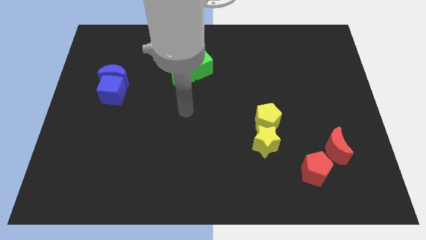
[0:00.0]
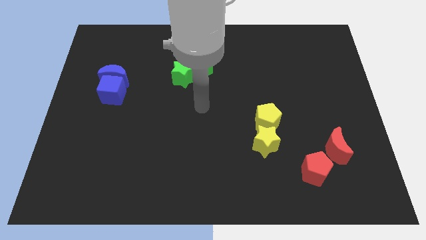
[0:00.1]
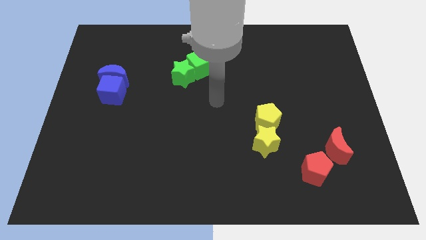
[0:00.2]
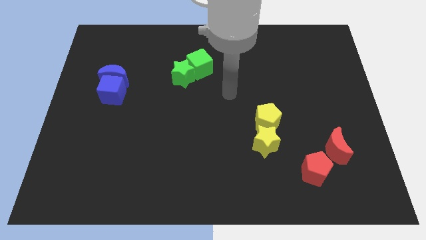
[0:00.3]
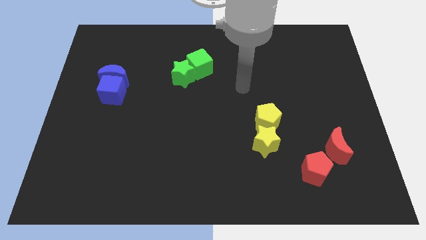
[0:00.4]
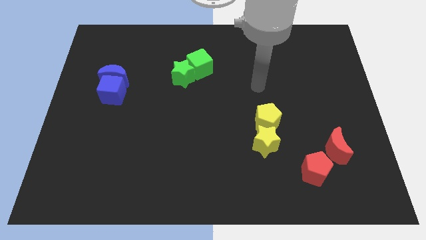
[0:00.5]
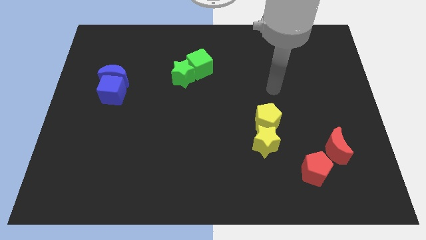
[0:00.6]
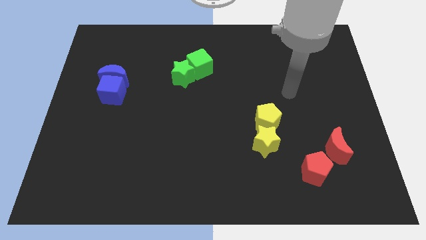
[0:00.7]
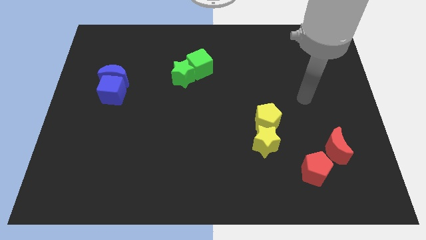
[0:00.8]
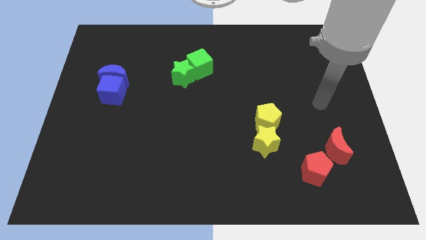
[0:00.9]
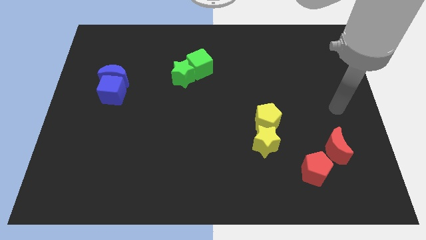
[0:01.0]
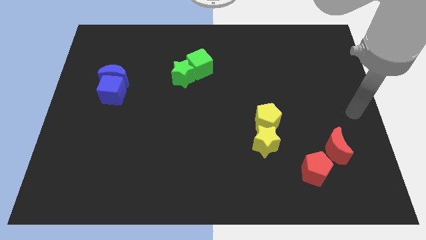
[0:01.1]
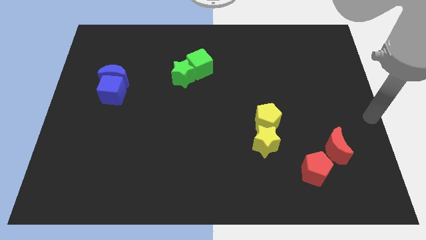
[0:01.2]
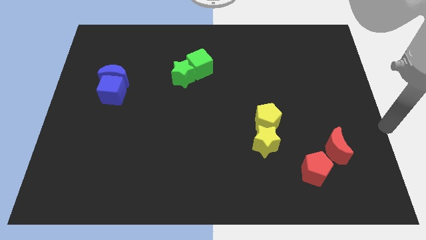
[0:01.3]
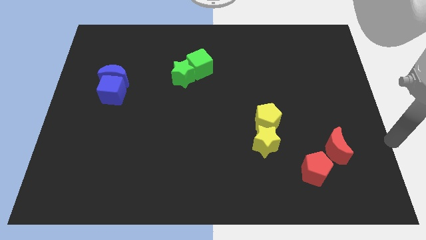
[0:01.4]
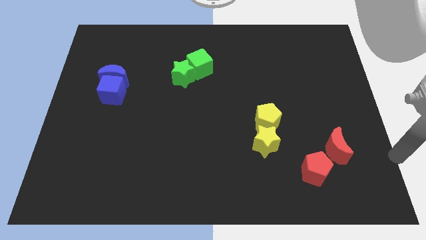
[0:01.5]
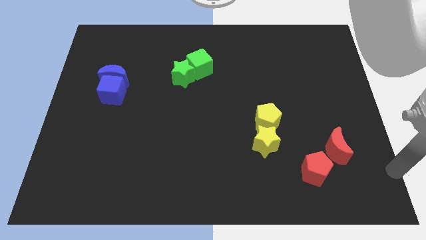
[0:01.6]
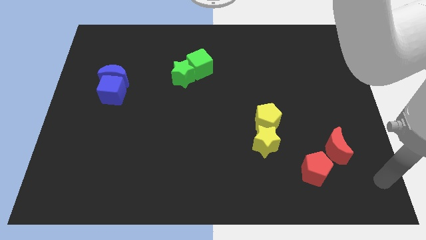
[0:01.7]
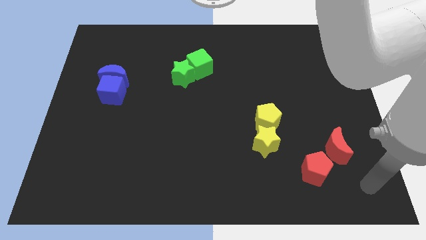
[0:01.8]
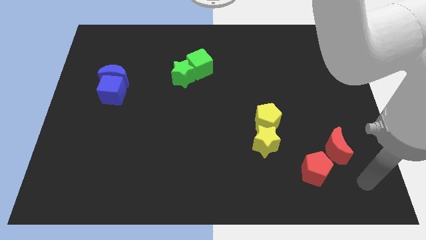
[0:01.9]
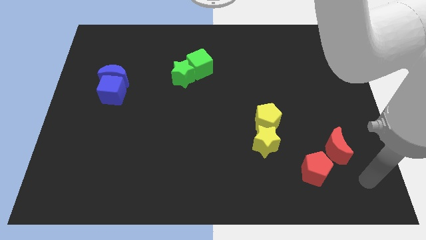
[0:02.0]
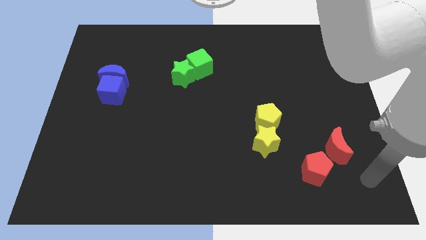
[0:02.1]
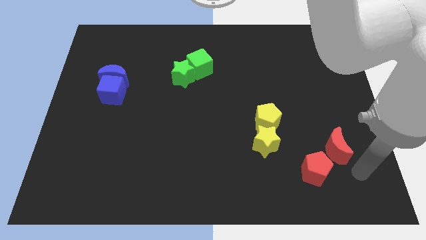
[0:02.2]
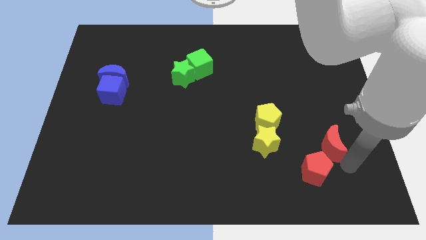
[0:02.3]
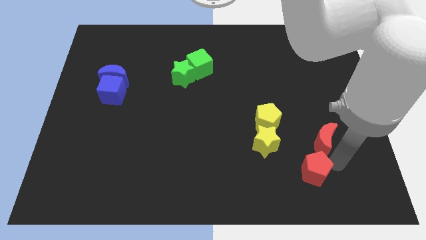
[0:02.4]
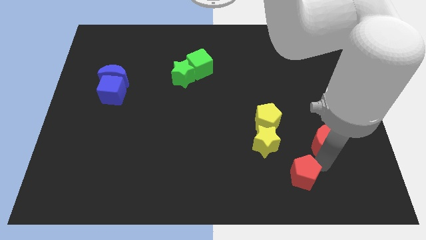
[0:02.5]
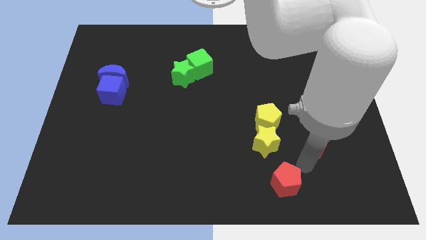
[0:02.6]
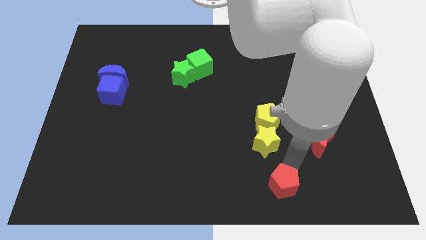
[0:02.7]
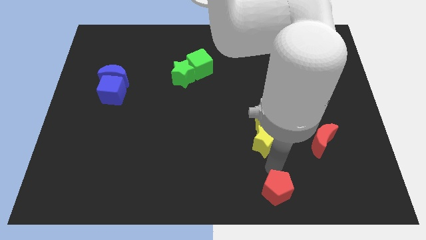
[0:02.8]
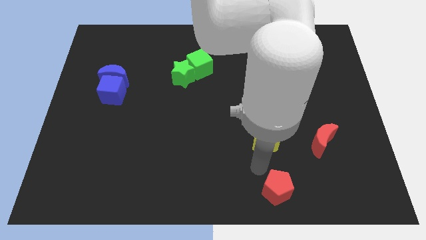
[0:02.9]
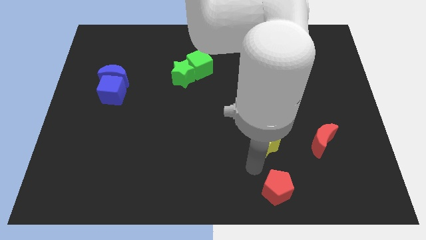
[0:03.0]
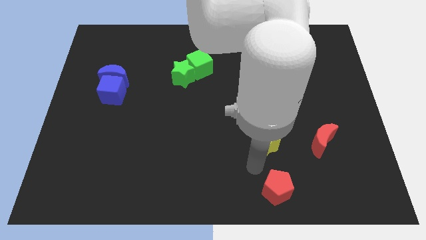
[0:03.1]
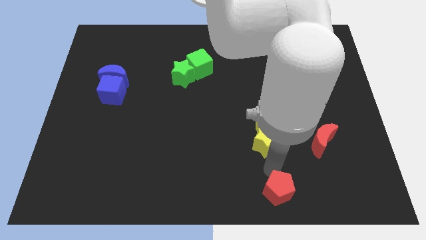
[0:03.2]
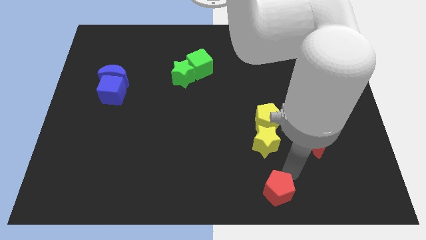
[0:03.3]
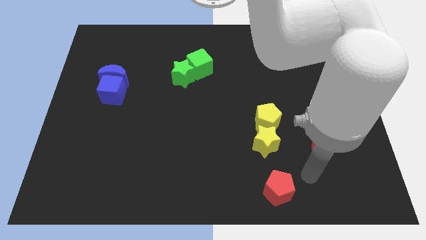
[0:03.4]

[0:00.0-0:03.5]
separate both the red crescent from the red pentagon

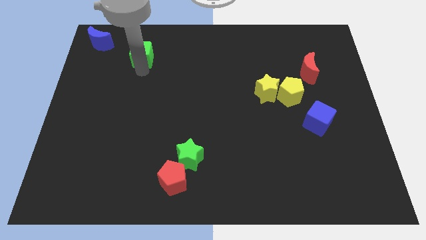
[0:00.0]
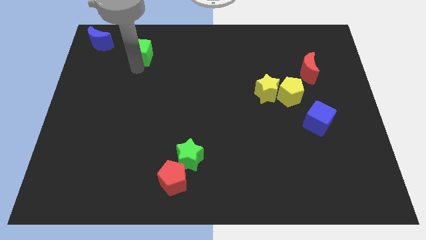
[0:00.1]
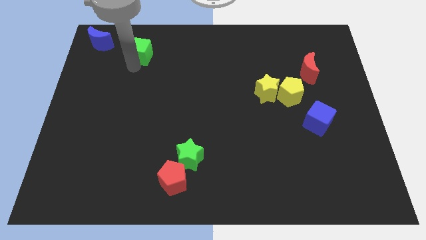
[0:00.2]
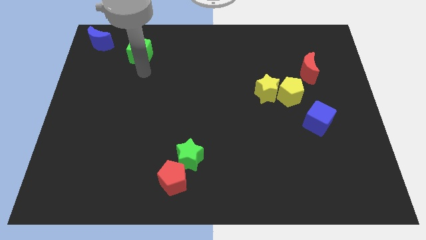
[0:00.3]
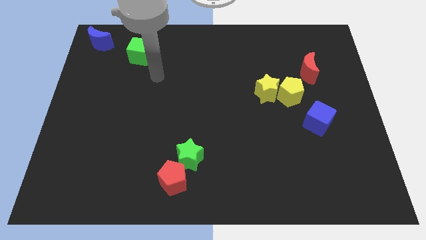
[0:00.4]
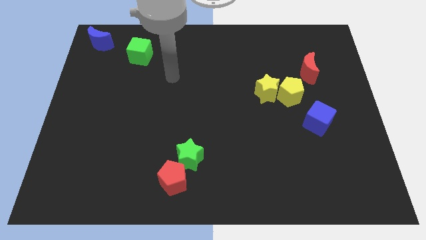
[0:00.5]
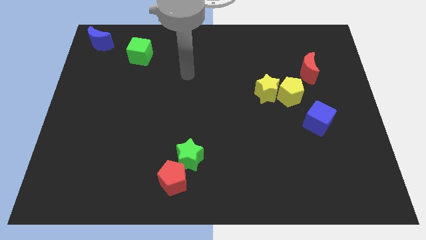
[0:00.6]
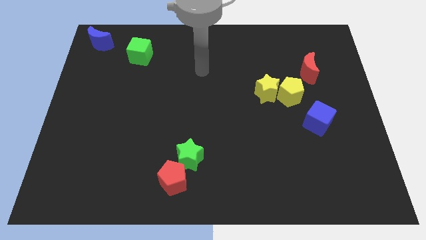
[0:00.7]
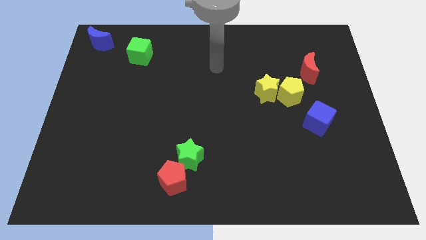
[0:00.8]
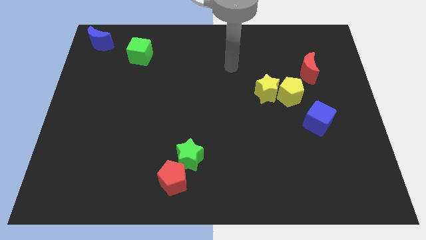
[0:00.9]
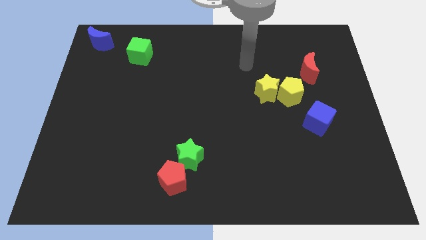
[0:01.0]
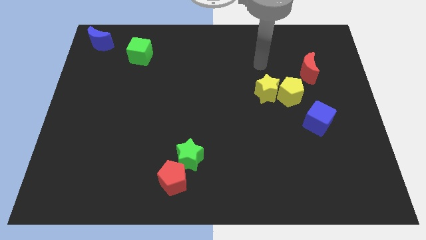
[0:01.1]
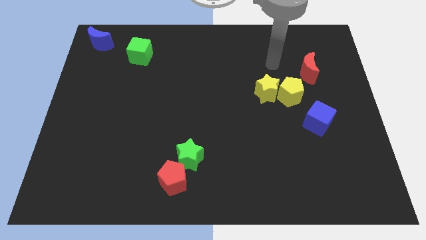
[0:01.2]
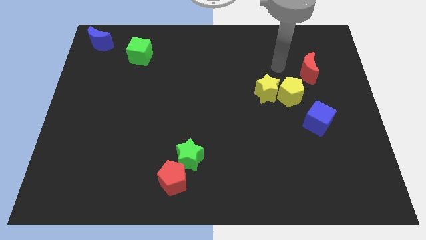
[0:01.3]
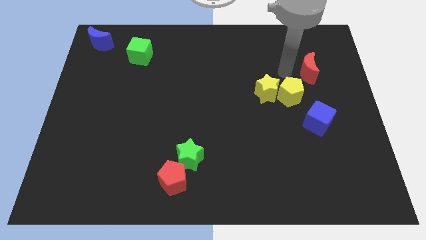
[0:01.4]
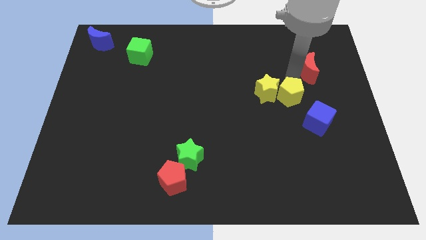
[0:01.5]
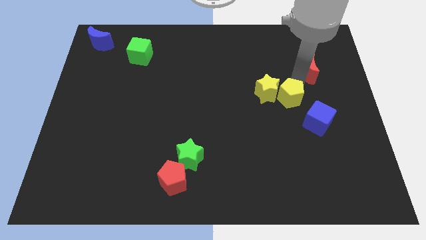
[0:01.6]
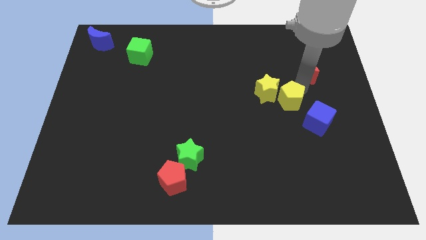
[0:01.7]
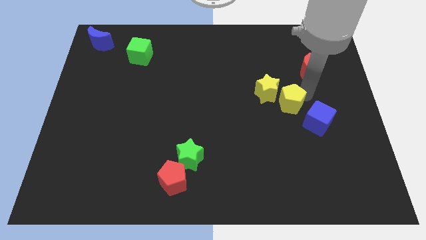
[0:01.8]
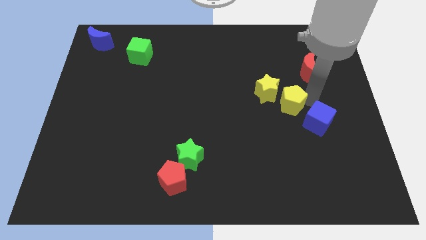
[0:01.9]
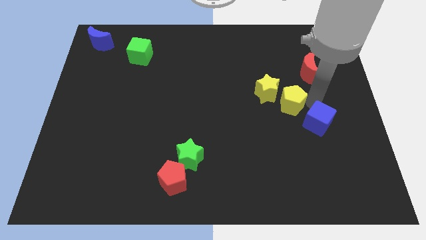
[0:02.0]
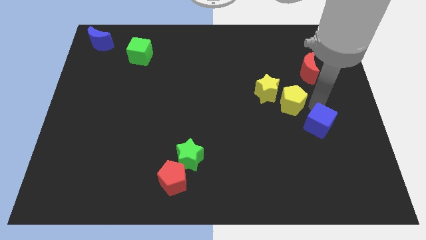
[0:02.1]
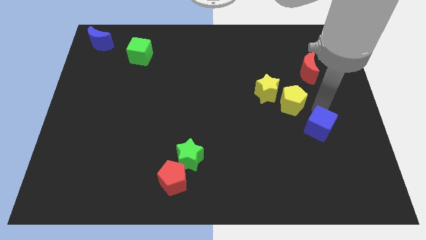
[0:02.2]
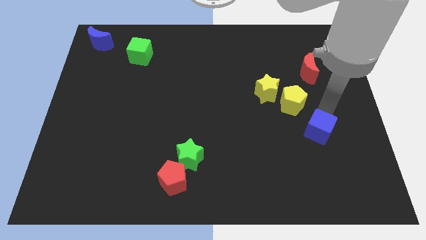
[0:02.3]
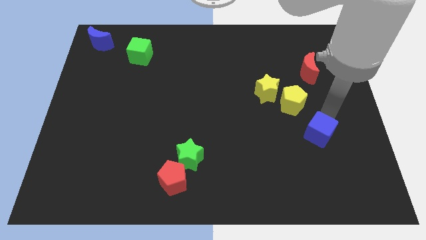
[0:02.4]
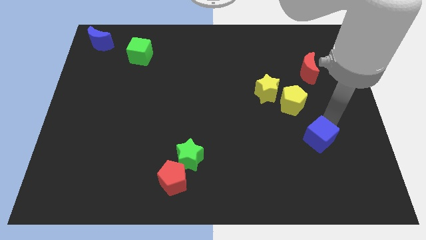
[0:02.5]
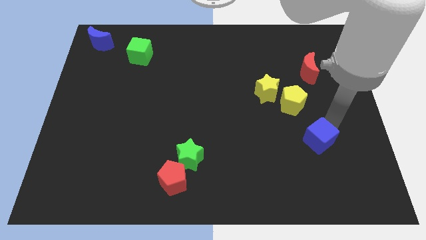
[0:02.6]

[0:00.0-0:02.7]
push the blue cube slightly to the bottom side

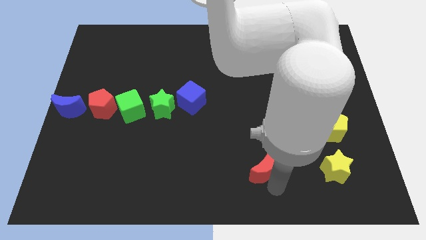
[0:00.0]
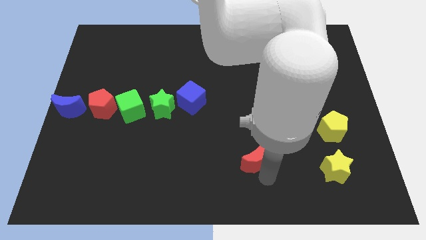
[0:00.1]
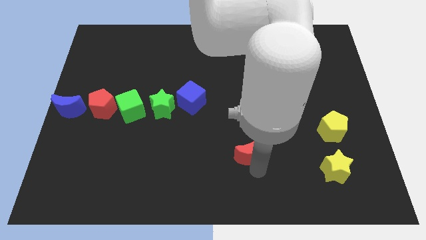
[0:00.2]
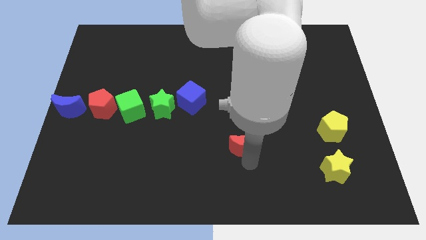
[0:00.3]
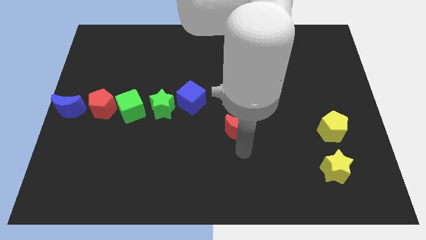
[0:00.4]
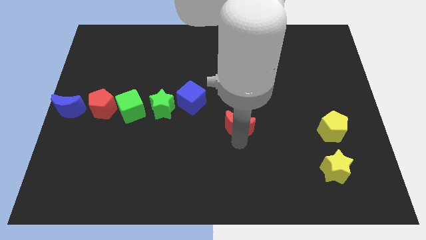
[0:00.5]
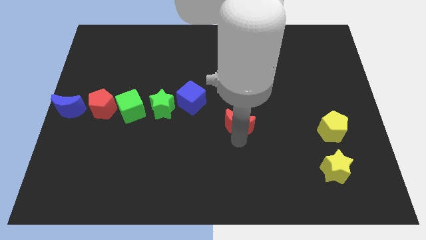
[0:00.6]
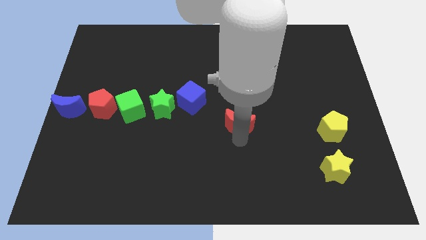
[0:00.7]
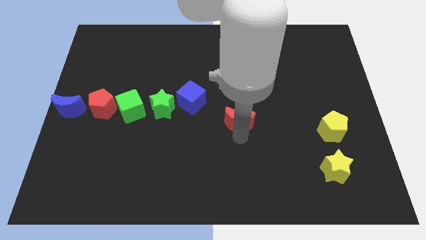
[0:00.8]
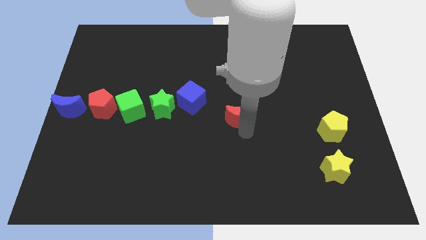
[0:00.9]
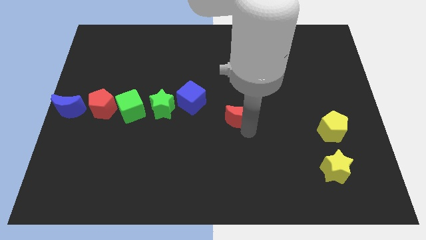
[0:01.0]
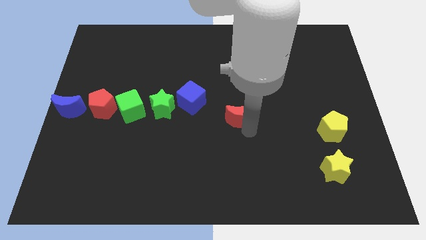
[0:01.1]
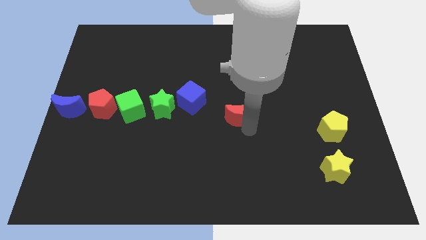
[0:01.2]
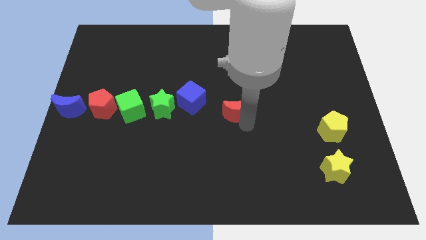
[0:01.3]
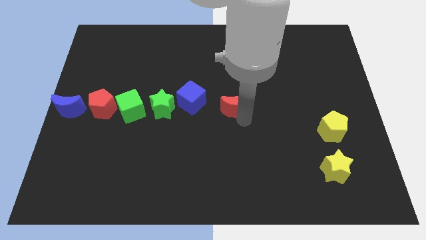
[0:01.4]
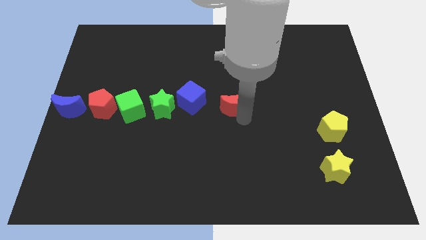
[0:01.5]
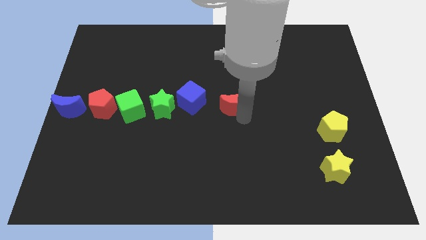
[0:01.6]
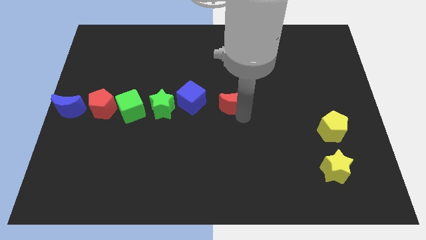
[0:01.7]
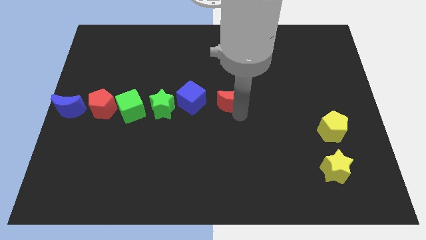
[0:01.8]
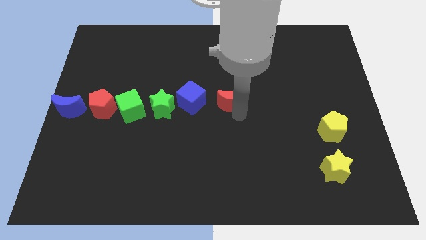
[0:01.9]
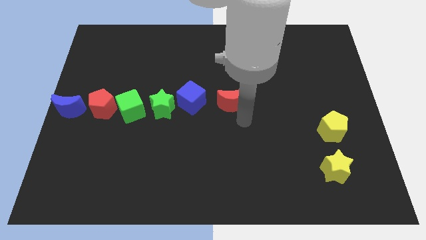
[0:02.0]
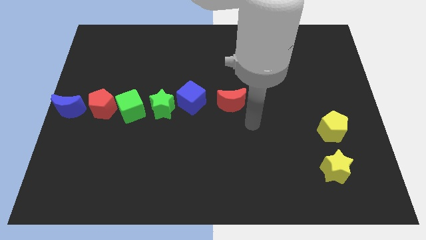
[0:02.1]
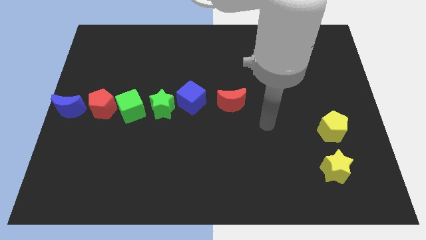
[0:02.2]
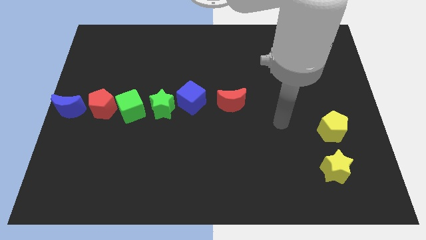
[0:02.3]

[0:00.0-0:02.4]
push the red crescent to the right of the blue cube

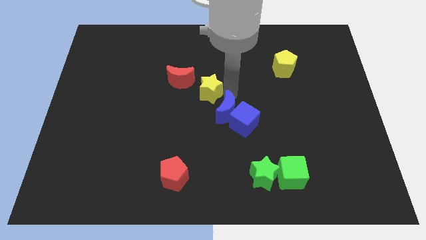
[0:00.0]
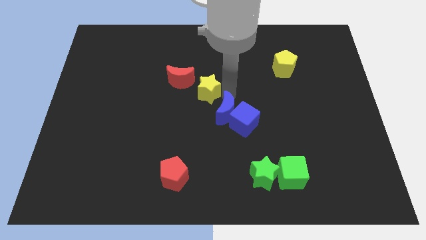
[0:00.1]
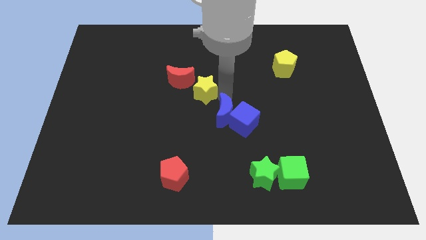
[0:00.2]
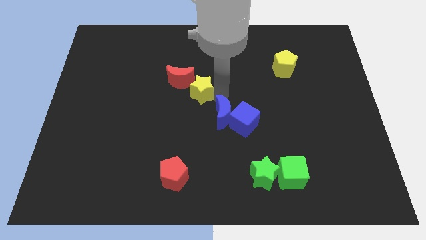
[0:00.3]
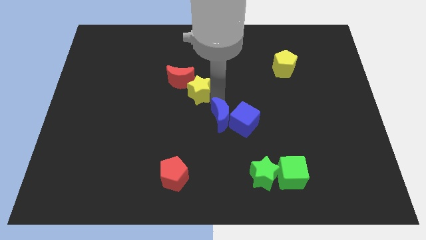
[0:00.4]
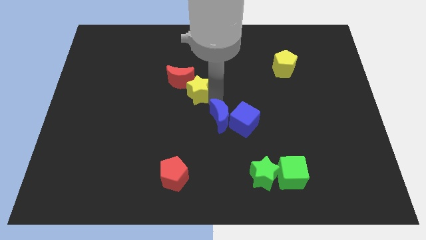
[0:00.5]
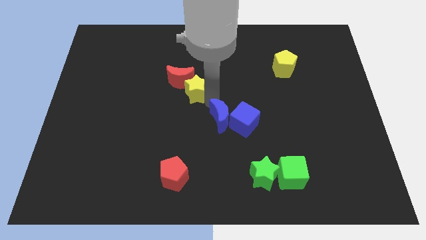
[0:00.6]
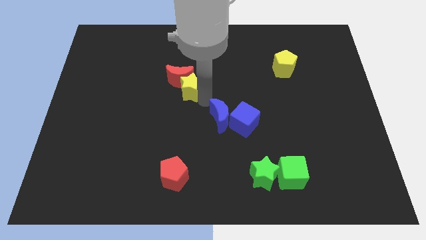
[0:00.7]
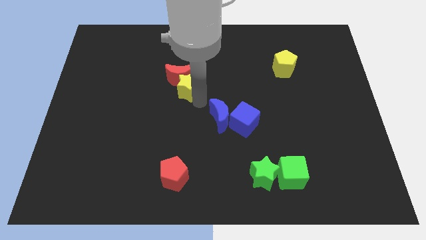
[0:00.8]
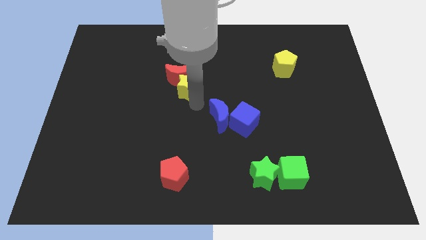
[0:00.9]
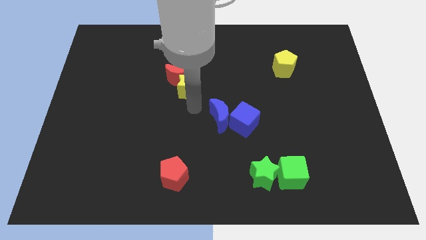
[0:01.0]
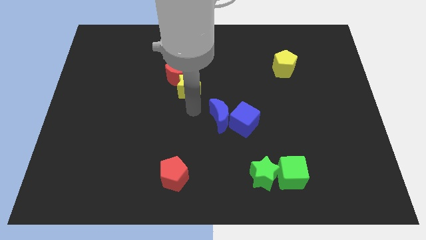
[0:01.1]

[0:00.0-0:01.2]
move the yellow star at the bottom of the red crescent
